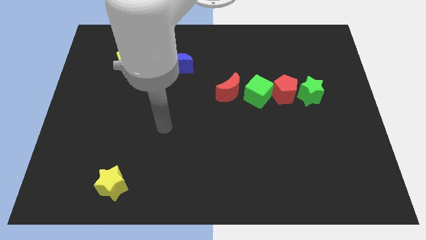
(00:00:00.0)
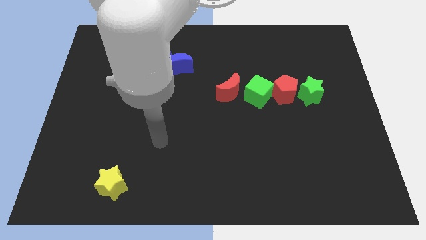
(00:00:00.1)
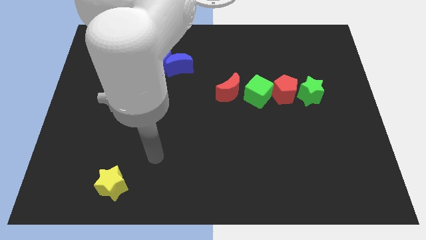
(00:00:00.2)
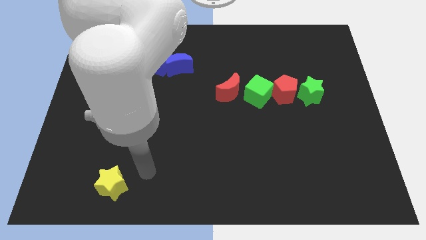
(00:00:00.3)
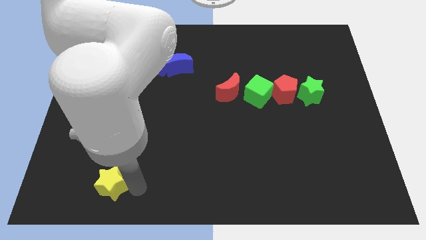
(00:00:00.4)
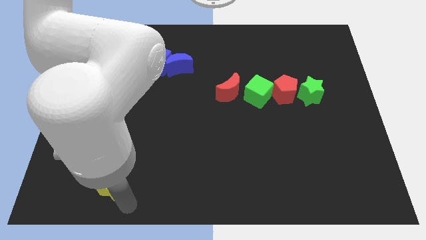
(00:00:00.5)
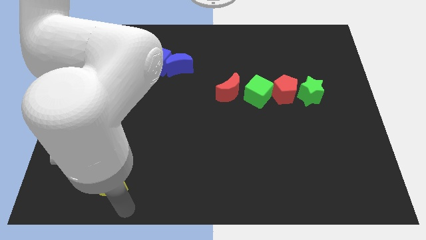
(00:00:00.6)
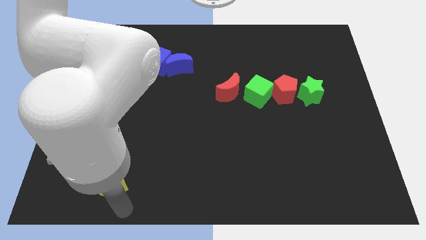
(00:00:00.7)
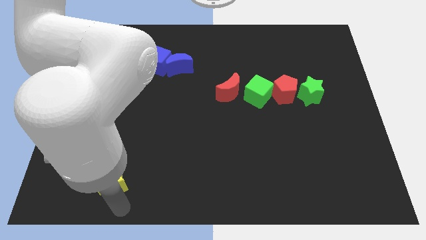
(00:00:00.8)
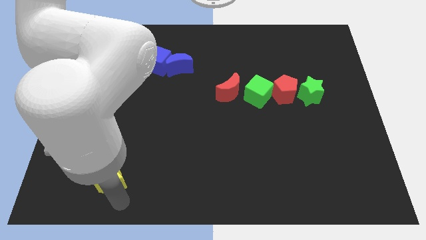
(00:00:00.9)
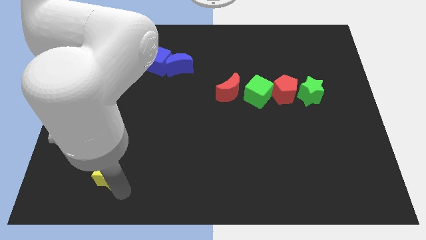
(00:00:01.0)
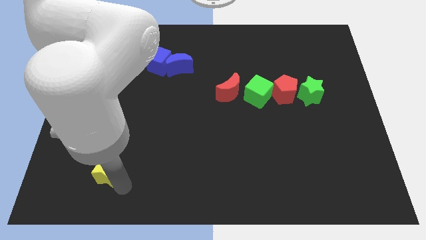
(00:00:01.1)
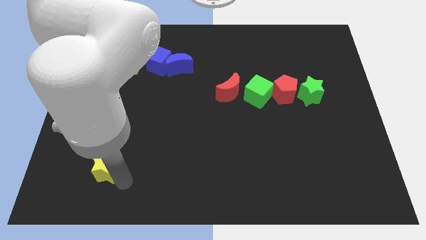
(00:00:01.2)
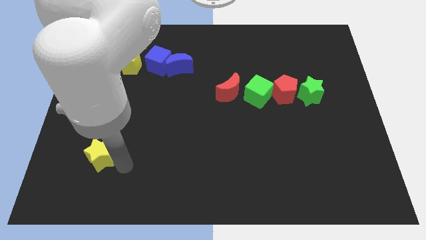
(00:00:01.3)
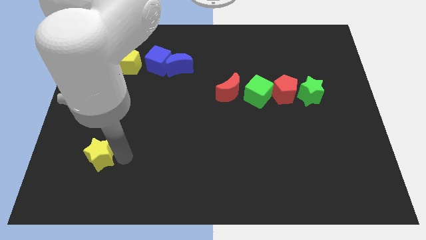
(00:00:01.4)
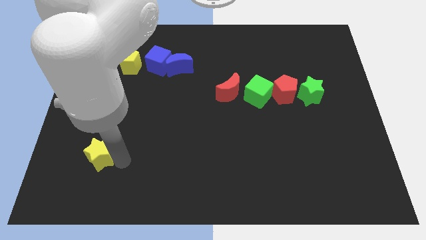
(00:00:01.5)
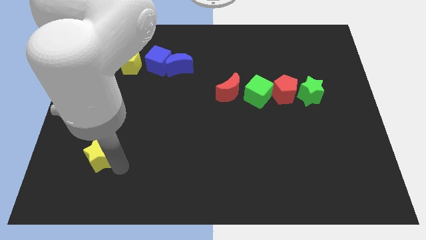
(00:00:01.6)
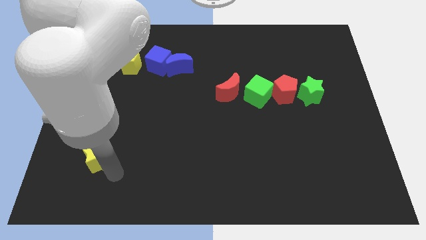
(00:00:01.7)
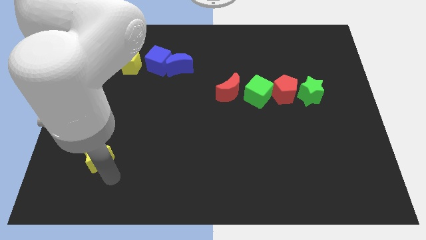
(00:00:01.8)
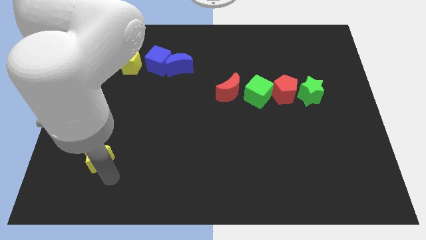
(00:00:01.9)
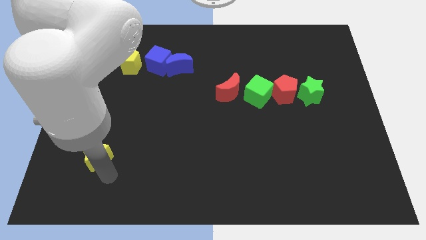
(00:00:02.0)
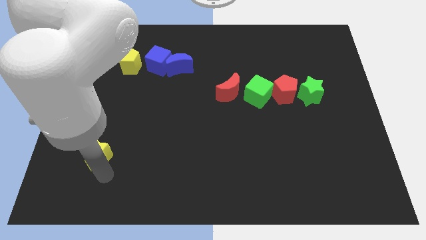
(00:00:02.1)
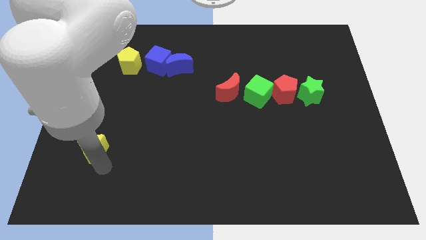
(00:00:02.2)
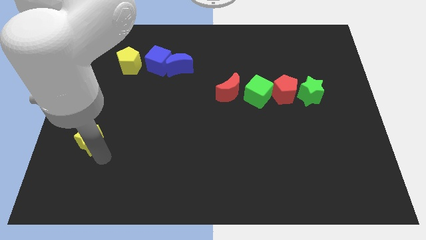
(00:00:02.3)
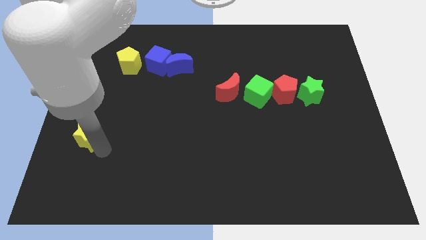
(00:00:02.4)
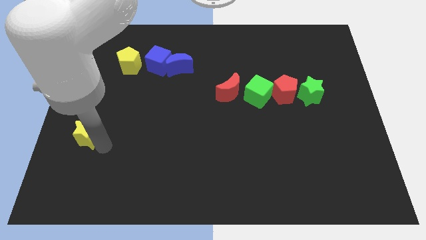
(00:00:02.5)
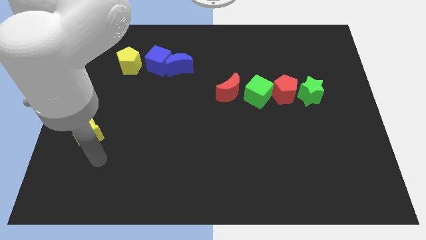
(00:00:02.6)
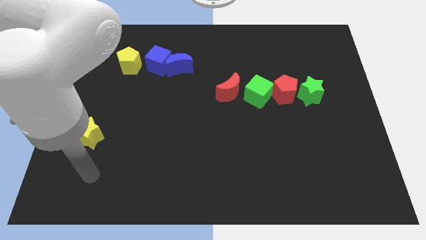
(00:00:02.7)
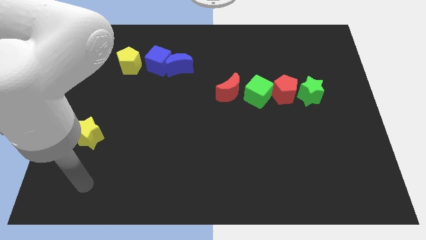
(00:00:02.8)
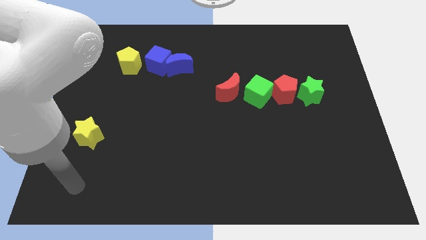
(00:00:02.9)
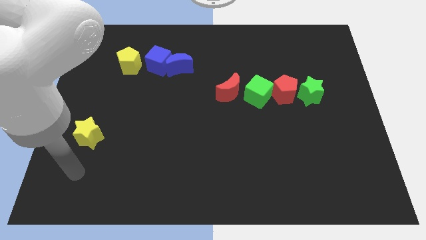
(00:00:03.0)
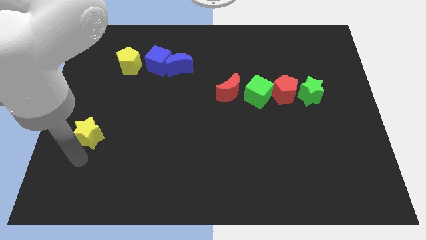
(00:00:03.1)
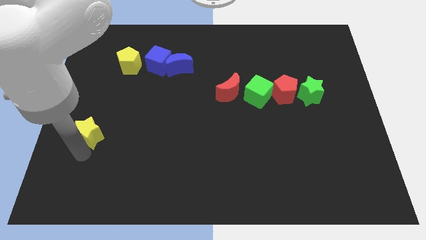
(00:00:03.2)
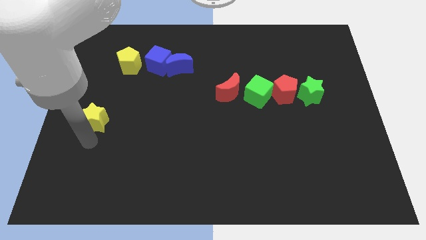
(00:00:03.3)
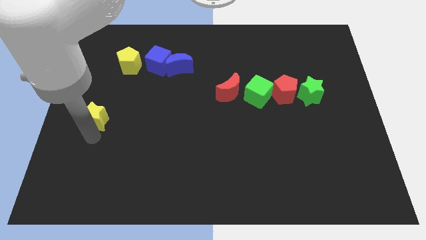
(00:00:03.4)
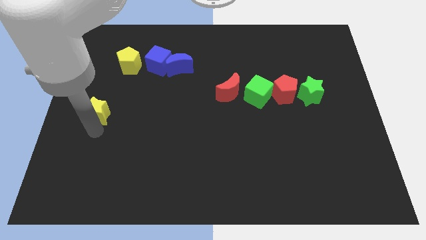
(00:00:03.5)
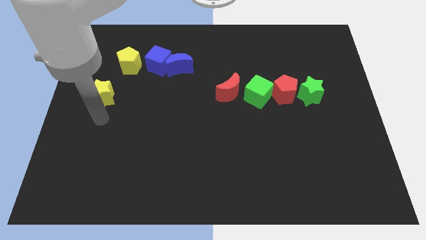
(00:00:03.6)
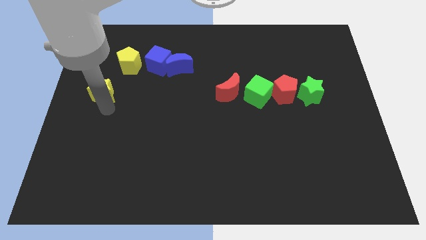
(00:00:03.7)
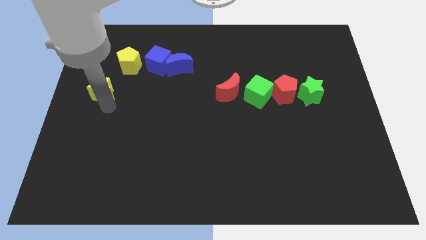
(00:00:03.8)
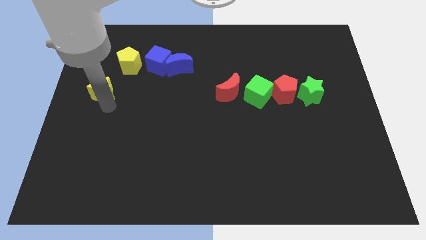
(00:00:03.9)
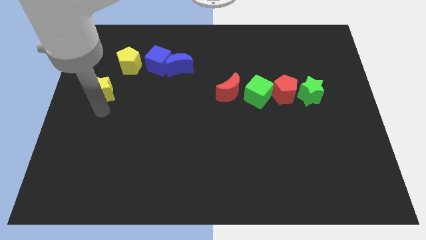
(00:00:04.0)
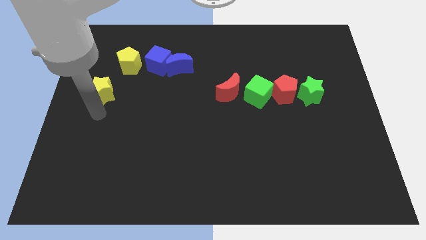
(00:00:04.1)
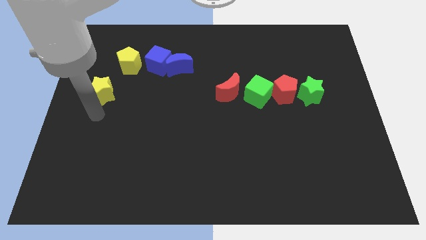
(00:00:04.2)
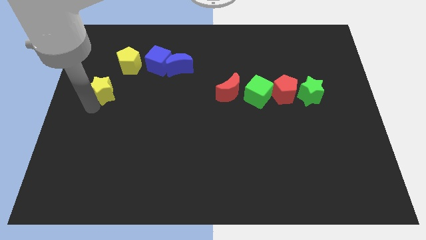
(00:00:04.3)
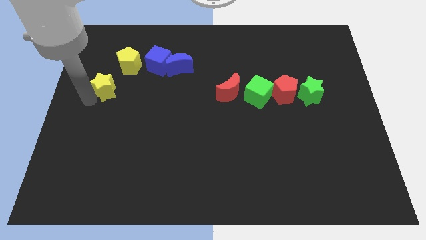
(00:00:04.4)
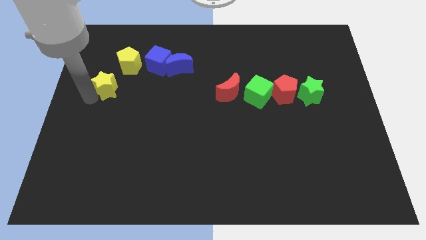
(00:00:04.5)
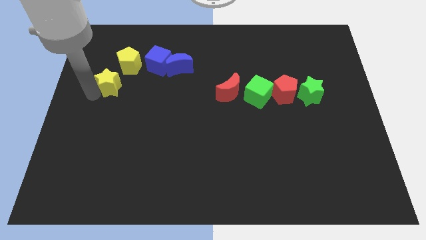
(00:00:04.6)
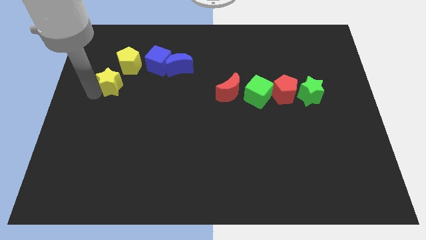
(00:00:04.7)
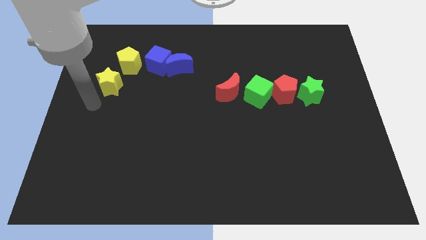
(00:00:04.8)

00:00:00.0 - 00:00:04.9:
move the yellow star to the top of the board

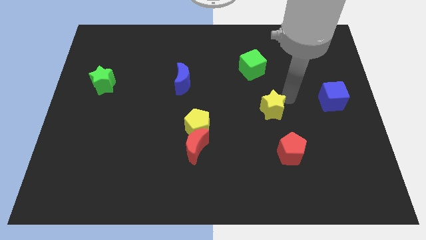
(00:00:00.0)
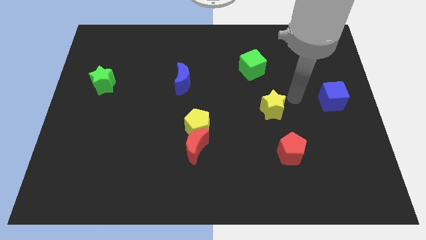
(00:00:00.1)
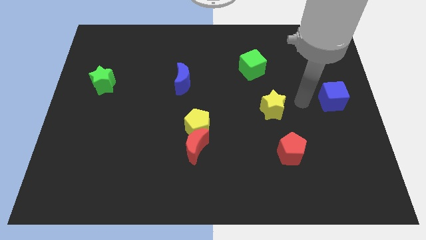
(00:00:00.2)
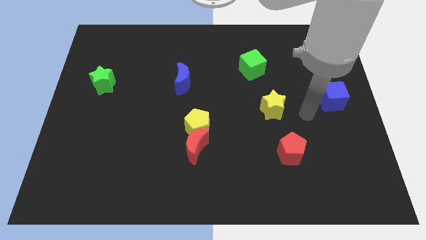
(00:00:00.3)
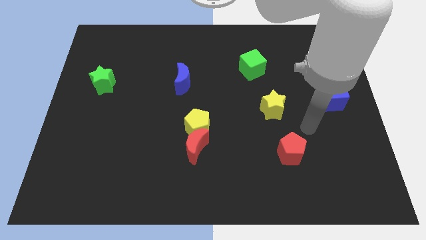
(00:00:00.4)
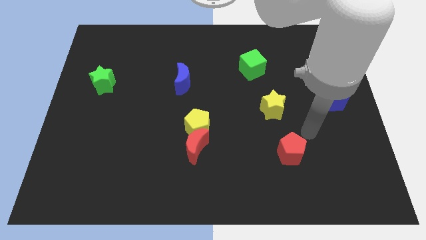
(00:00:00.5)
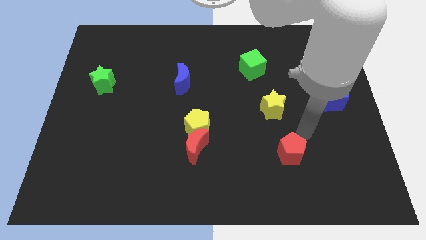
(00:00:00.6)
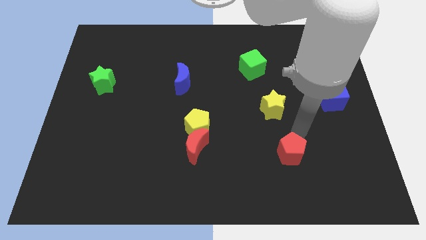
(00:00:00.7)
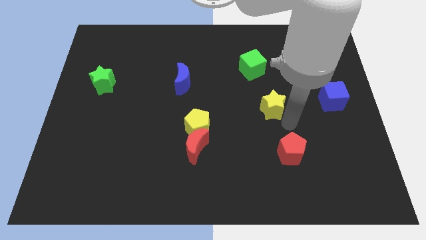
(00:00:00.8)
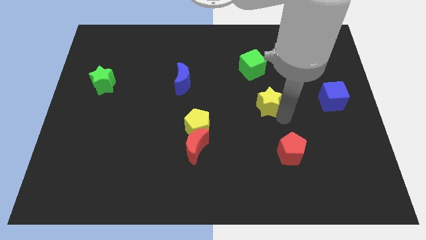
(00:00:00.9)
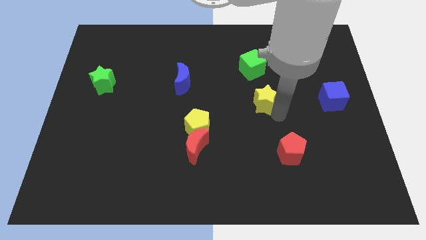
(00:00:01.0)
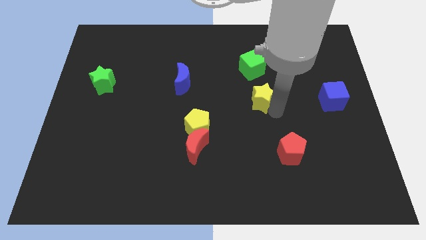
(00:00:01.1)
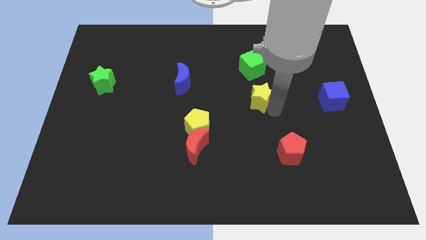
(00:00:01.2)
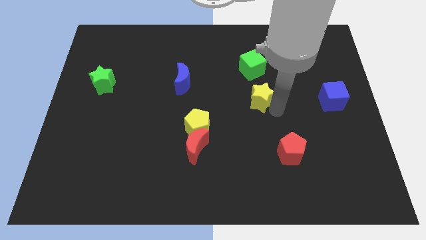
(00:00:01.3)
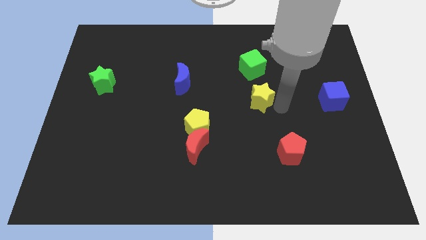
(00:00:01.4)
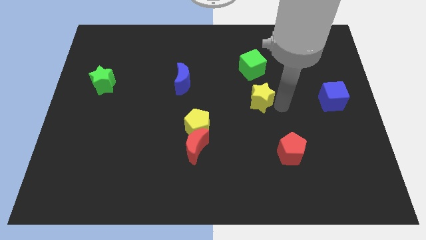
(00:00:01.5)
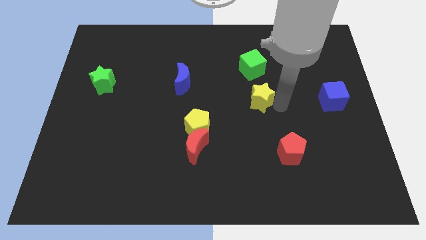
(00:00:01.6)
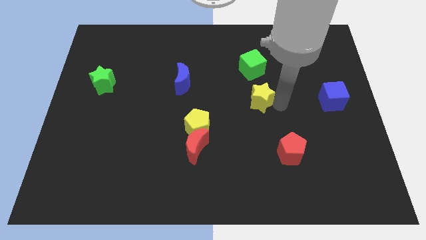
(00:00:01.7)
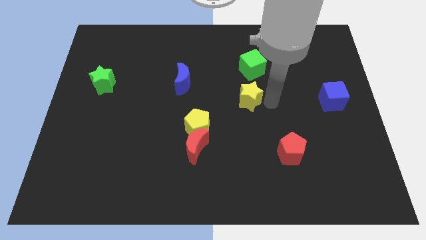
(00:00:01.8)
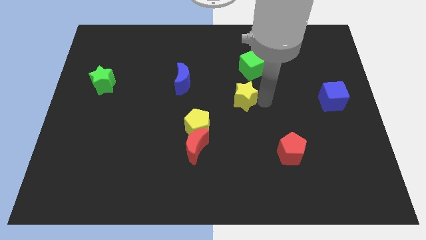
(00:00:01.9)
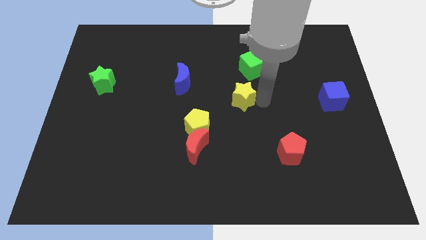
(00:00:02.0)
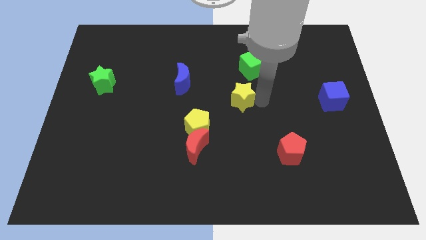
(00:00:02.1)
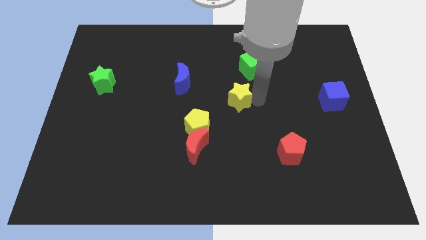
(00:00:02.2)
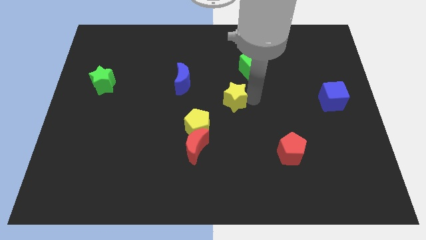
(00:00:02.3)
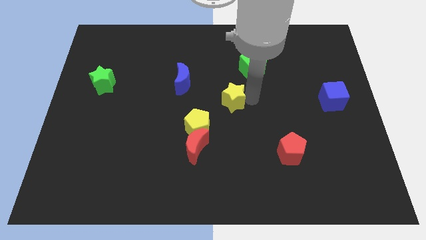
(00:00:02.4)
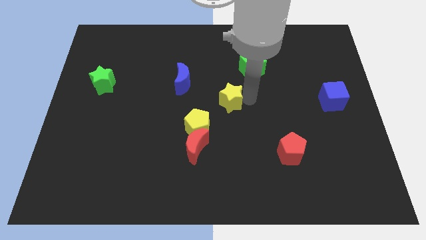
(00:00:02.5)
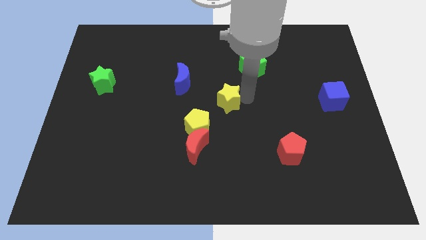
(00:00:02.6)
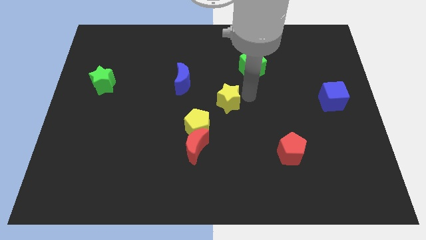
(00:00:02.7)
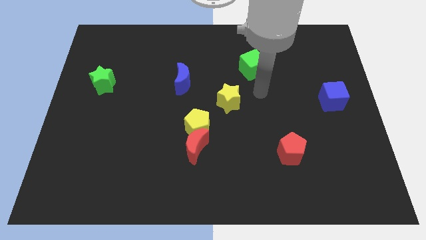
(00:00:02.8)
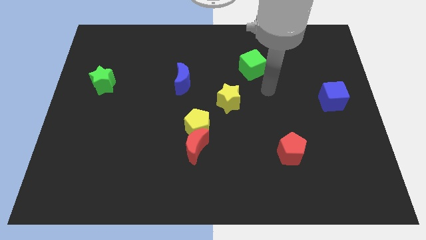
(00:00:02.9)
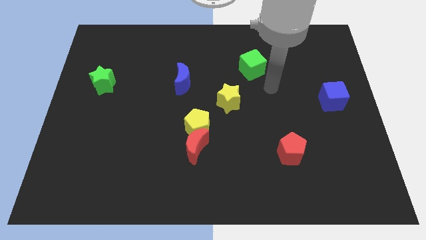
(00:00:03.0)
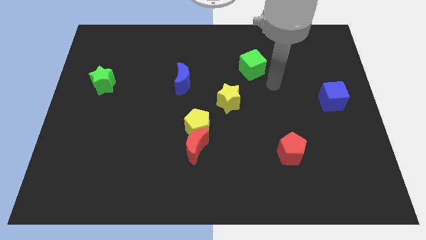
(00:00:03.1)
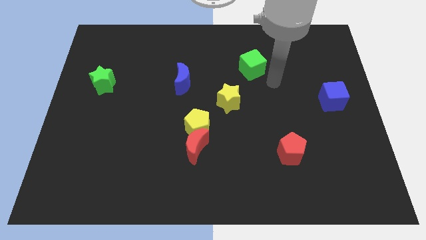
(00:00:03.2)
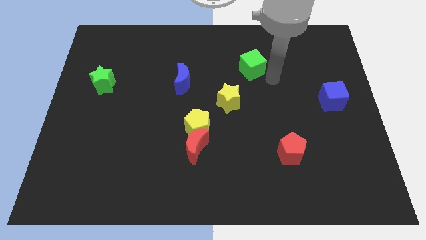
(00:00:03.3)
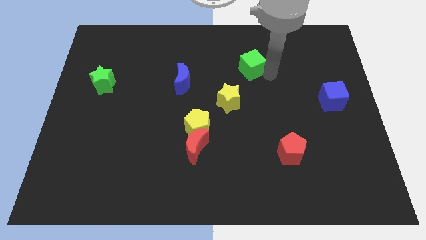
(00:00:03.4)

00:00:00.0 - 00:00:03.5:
place the yellow star diagonally on the bottom left side of the green cube

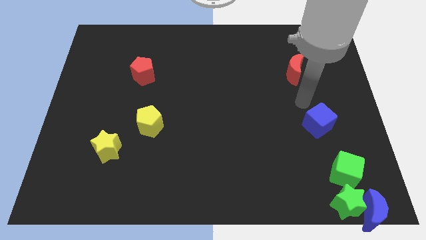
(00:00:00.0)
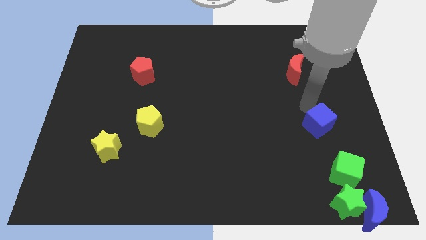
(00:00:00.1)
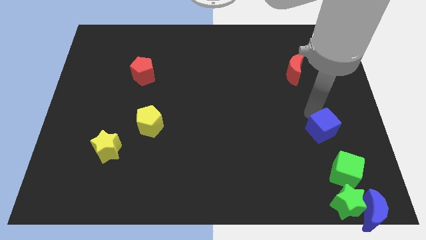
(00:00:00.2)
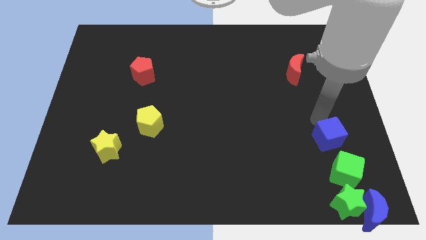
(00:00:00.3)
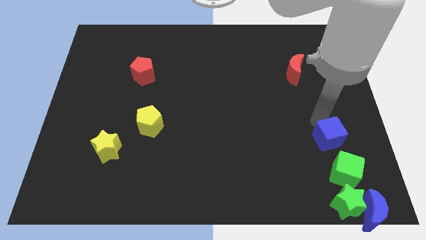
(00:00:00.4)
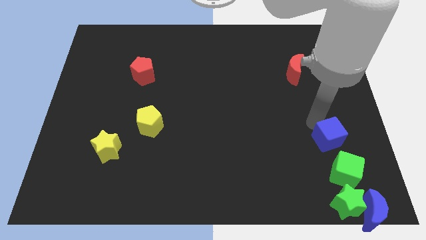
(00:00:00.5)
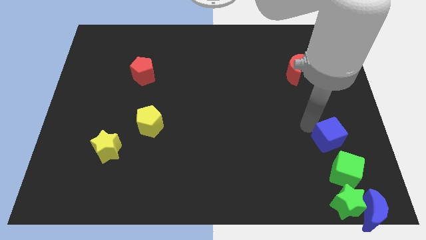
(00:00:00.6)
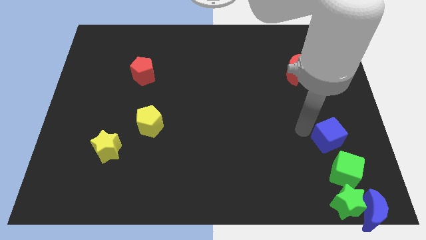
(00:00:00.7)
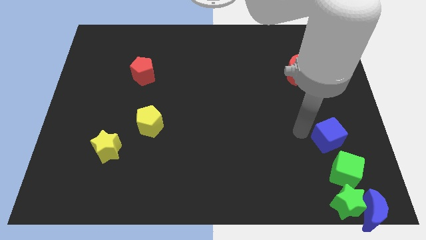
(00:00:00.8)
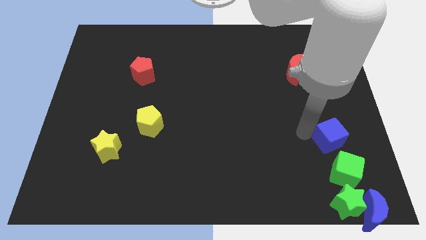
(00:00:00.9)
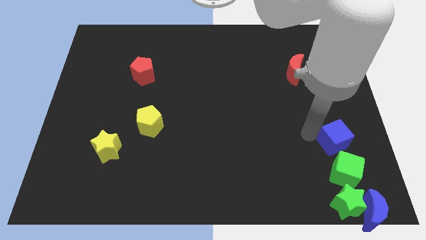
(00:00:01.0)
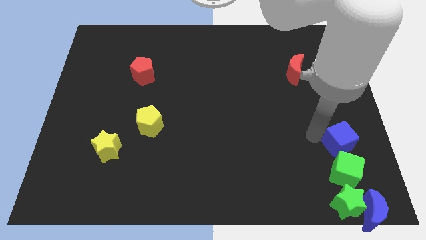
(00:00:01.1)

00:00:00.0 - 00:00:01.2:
place the blue cube above the green cube
